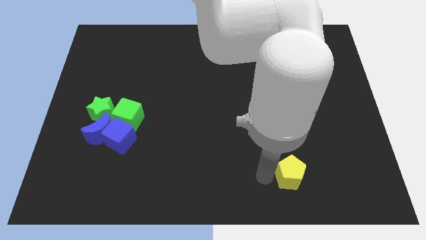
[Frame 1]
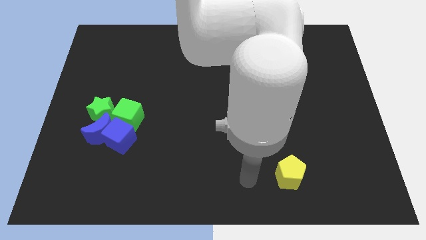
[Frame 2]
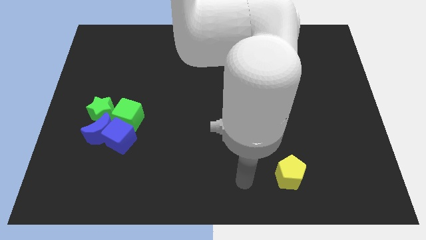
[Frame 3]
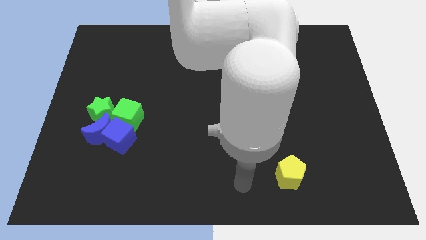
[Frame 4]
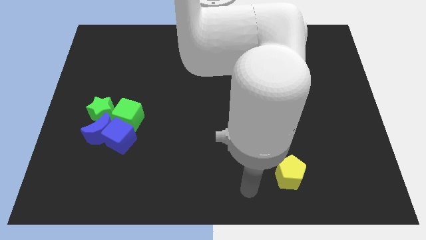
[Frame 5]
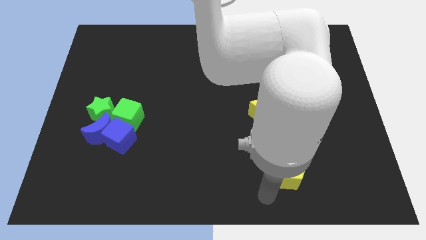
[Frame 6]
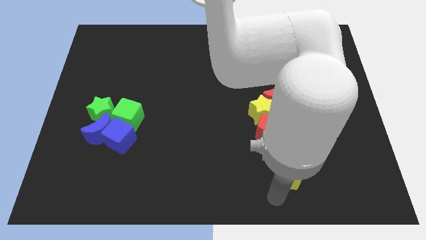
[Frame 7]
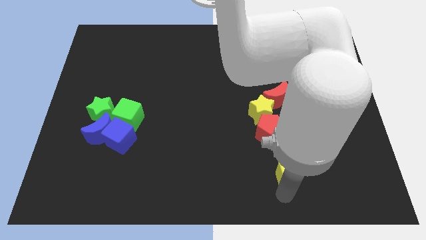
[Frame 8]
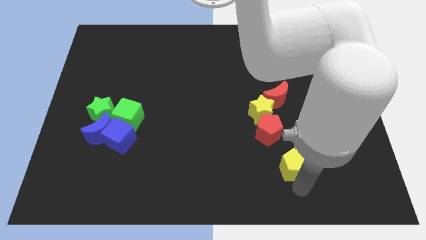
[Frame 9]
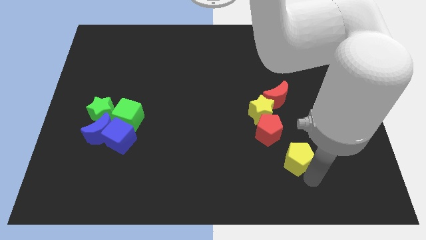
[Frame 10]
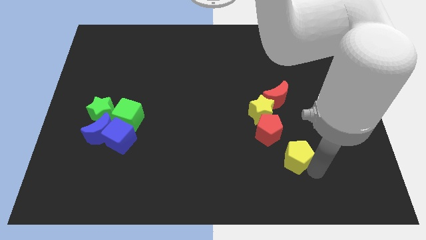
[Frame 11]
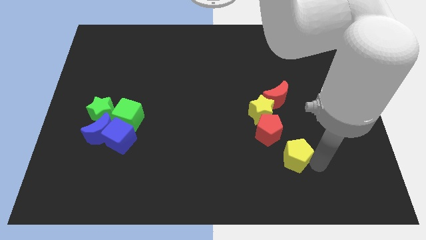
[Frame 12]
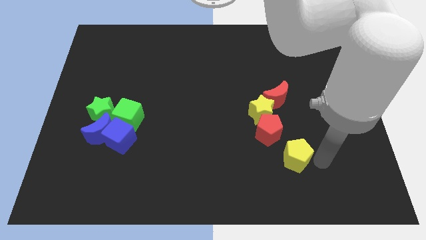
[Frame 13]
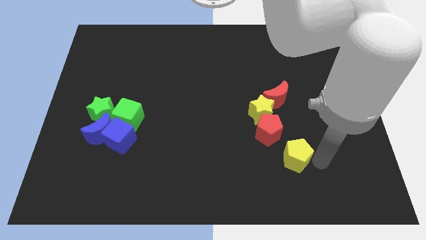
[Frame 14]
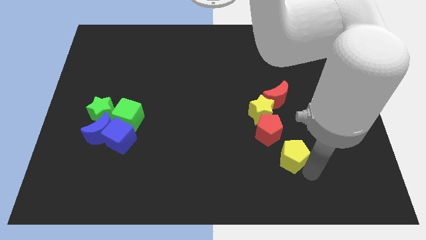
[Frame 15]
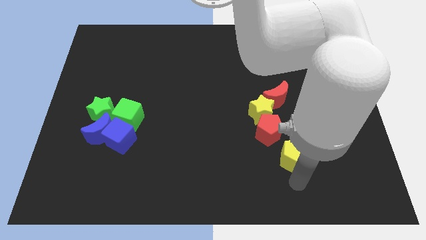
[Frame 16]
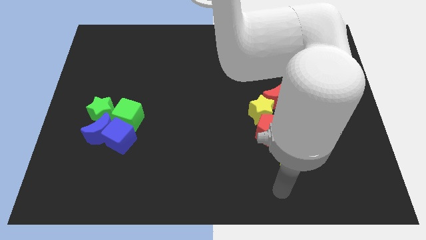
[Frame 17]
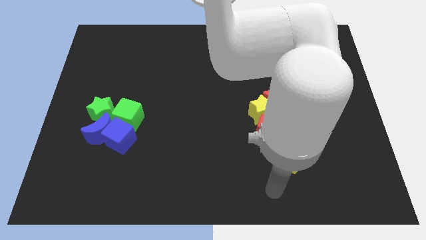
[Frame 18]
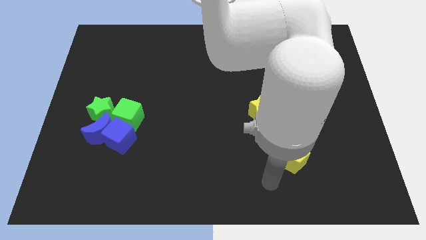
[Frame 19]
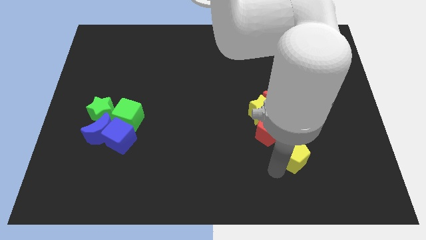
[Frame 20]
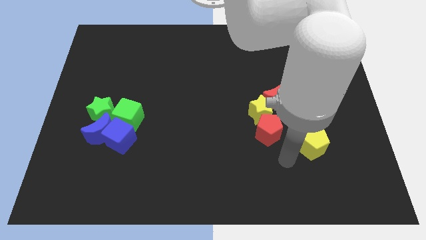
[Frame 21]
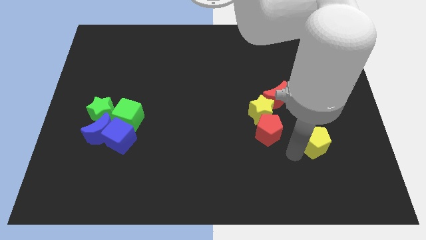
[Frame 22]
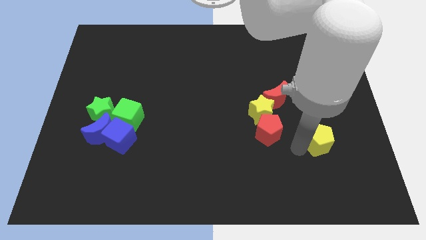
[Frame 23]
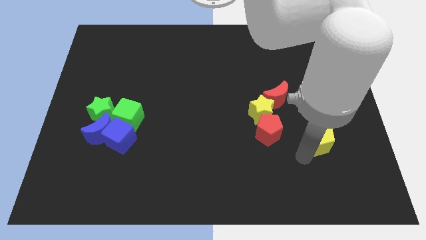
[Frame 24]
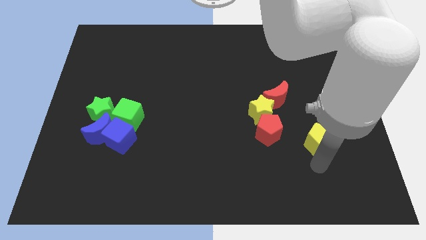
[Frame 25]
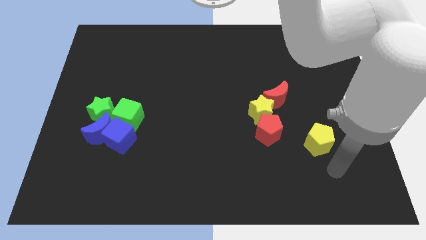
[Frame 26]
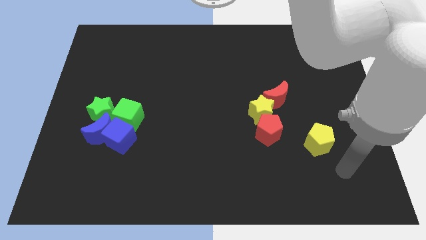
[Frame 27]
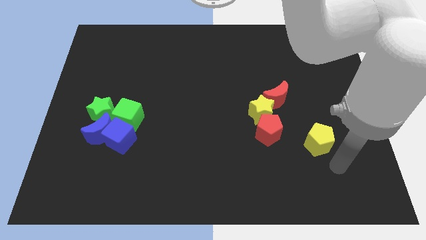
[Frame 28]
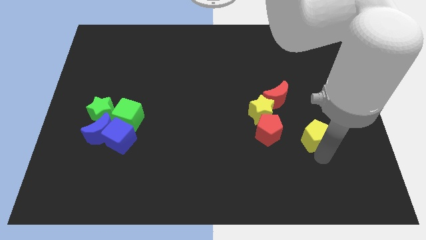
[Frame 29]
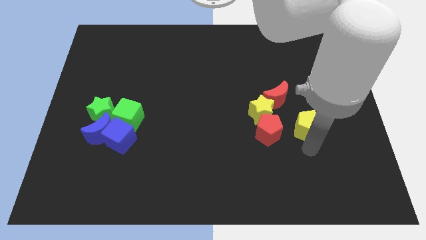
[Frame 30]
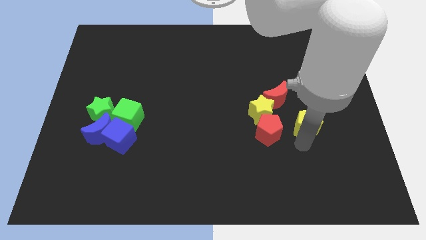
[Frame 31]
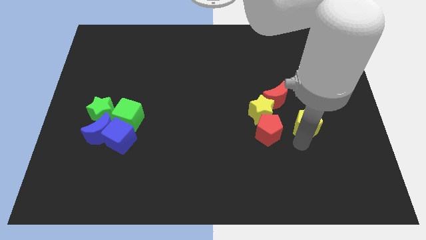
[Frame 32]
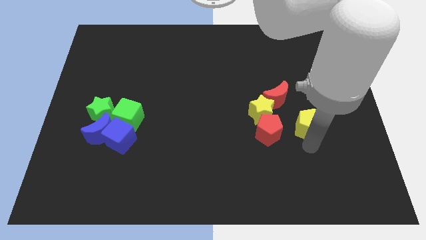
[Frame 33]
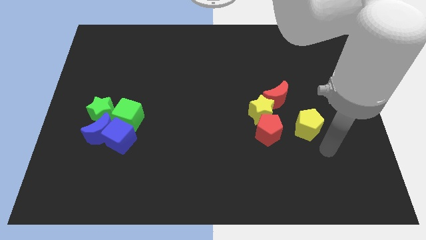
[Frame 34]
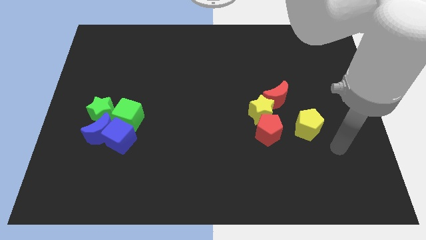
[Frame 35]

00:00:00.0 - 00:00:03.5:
push the yellow pentagon to the right of the red pentagon

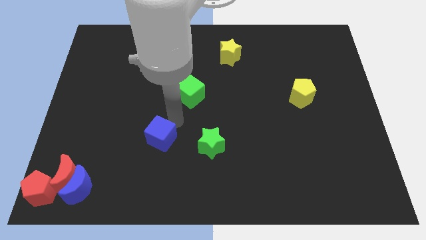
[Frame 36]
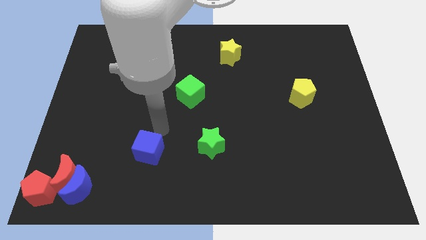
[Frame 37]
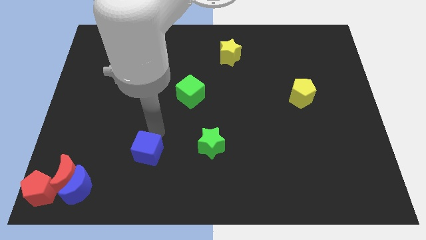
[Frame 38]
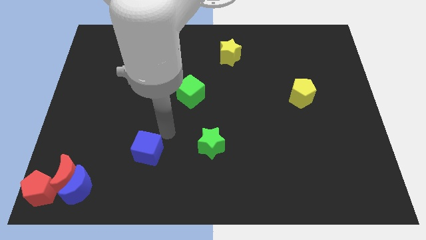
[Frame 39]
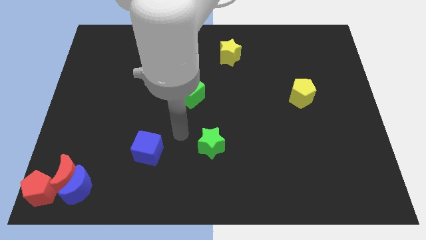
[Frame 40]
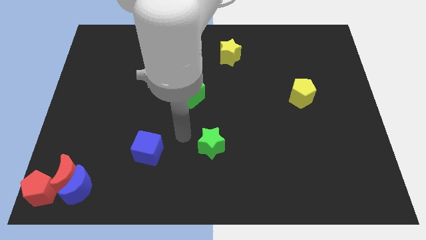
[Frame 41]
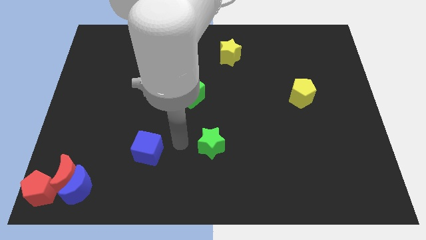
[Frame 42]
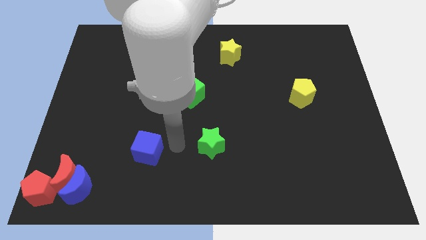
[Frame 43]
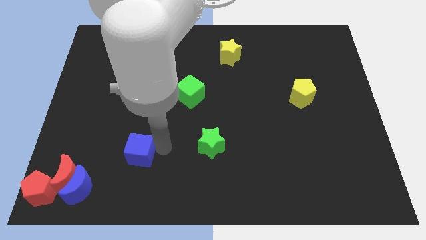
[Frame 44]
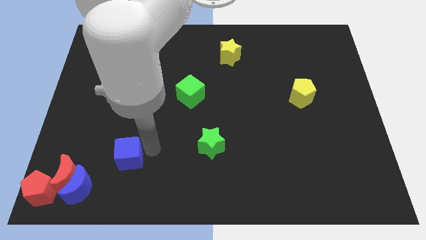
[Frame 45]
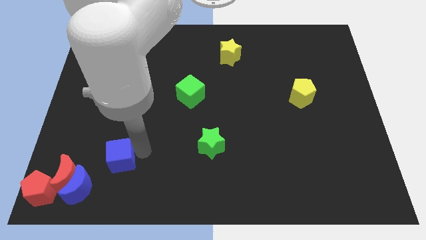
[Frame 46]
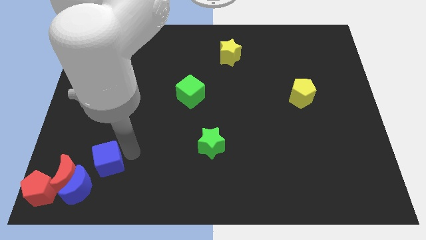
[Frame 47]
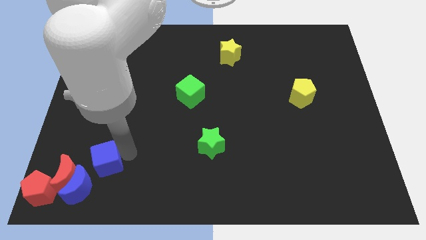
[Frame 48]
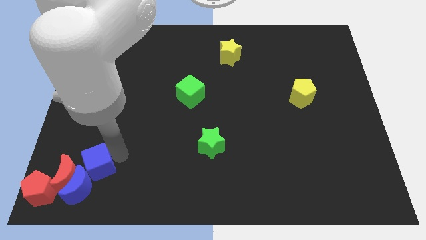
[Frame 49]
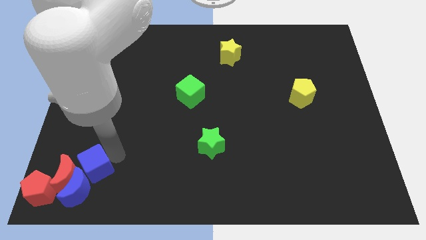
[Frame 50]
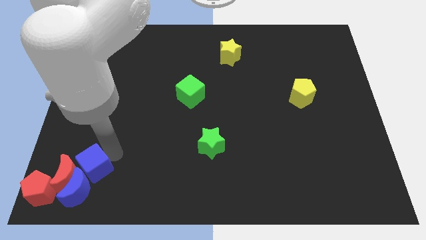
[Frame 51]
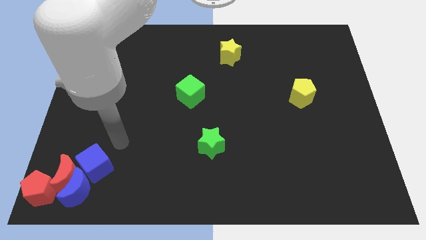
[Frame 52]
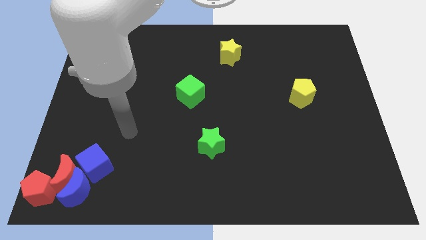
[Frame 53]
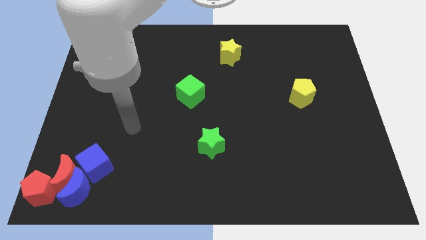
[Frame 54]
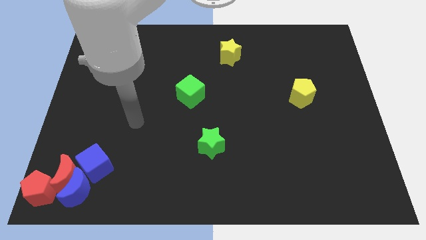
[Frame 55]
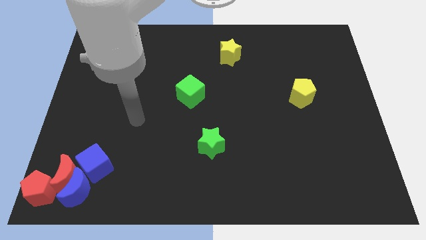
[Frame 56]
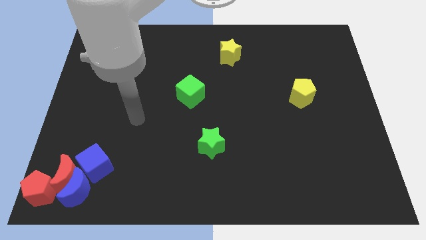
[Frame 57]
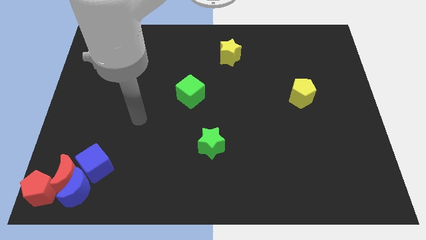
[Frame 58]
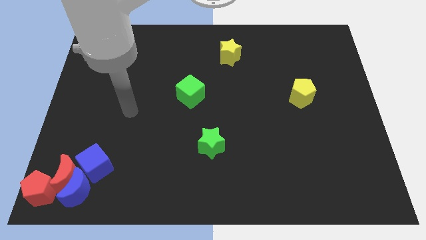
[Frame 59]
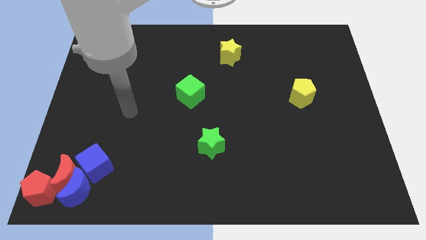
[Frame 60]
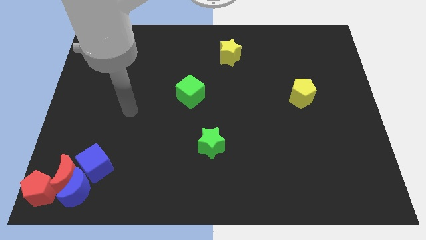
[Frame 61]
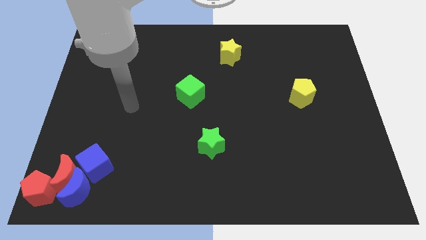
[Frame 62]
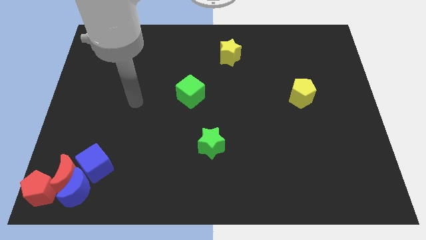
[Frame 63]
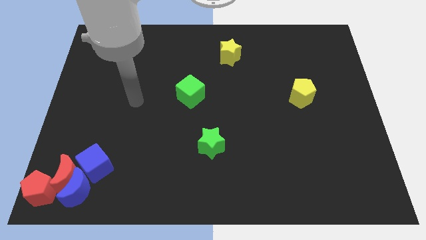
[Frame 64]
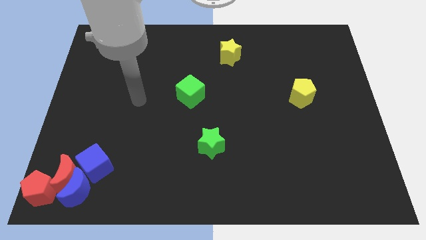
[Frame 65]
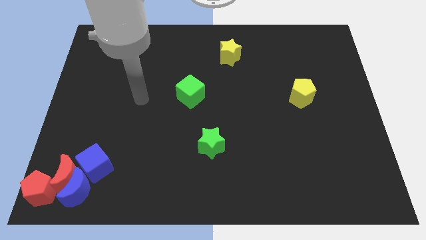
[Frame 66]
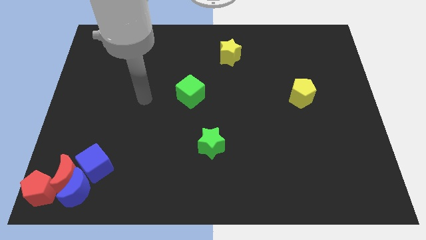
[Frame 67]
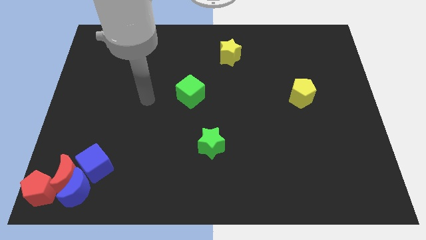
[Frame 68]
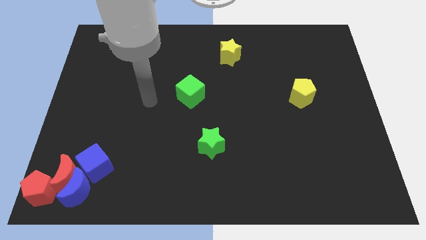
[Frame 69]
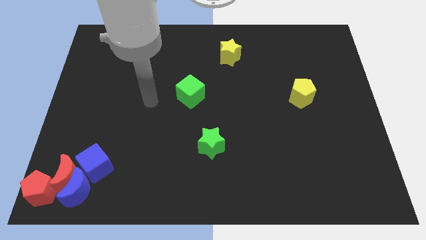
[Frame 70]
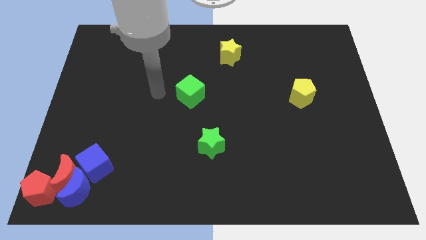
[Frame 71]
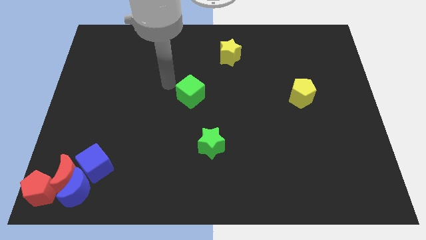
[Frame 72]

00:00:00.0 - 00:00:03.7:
push the blue cube into the blue crescent

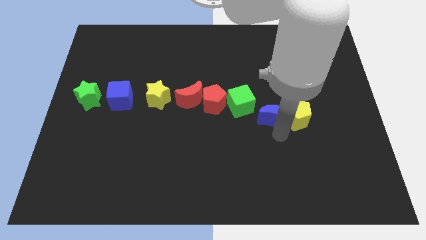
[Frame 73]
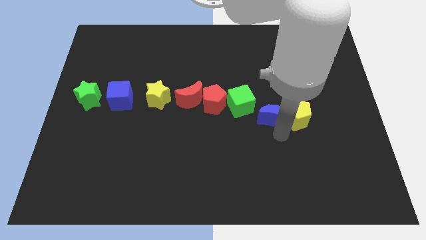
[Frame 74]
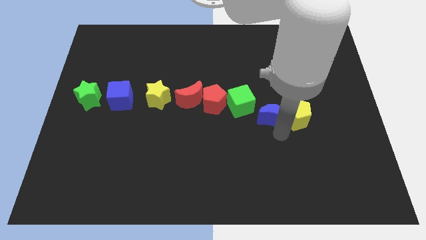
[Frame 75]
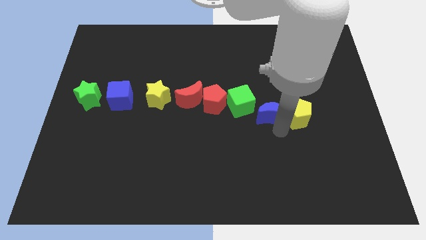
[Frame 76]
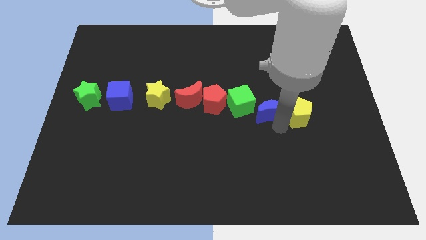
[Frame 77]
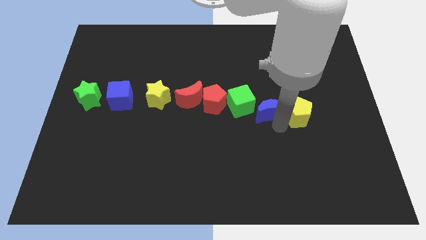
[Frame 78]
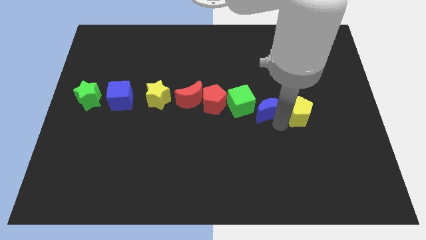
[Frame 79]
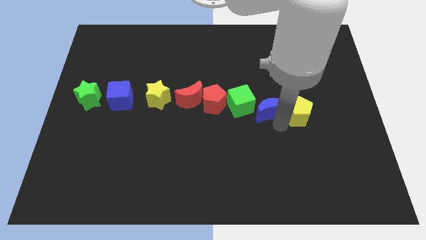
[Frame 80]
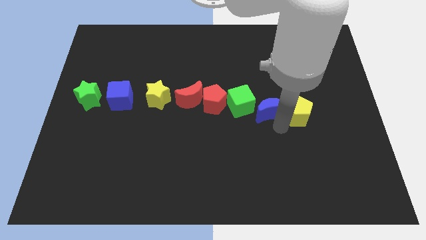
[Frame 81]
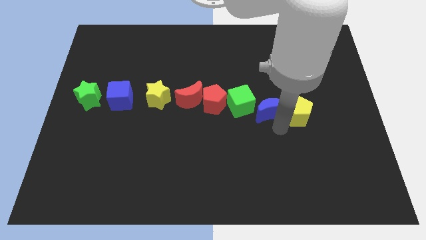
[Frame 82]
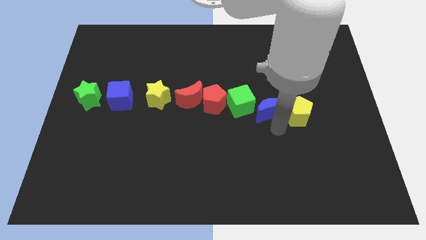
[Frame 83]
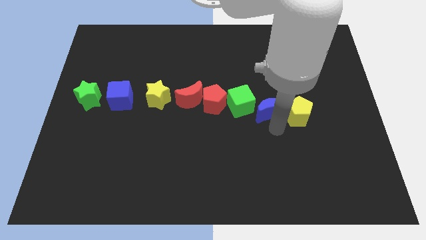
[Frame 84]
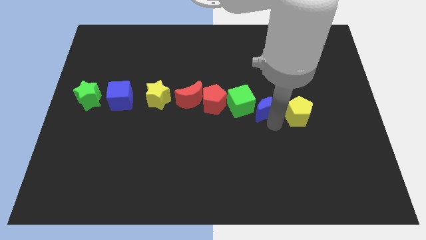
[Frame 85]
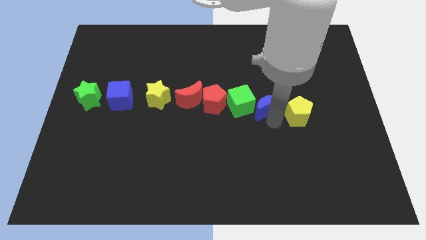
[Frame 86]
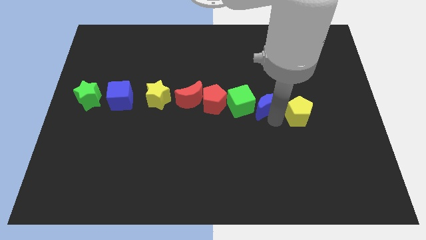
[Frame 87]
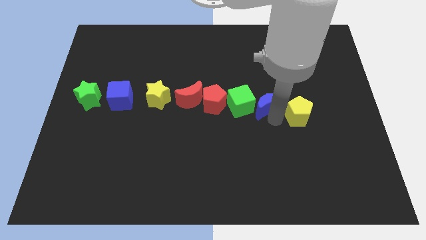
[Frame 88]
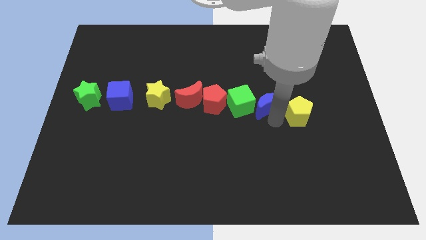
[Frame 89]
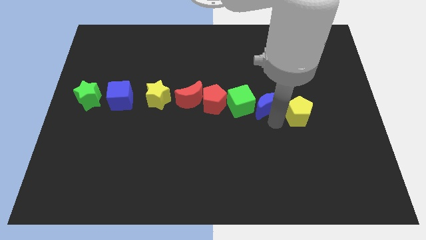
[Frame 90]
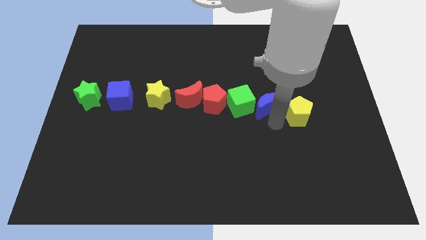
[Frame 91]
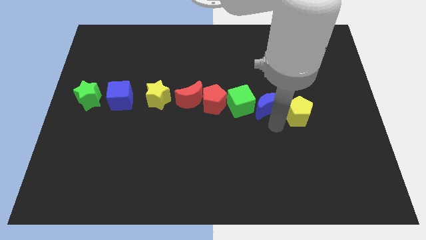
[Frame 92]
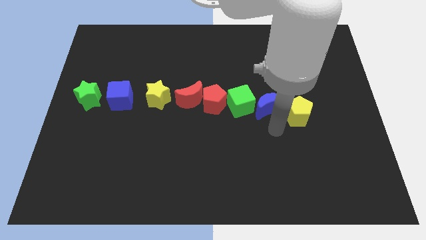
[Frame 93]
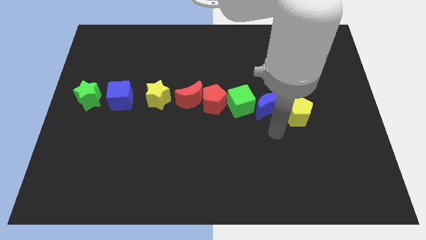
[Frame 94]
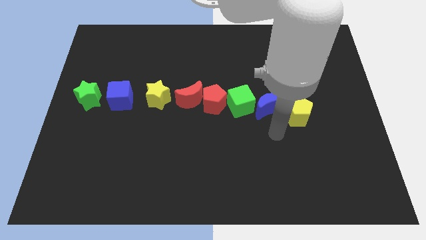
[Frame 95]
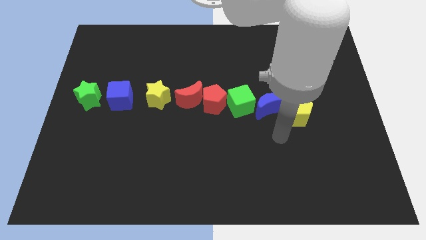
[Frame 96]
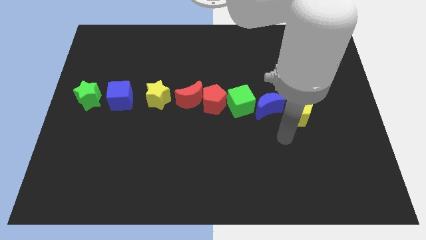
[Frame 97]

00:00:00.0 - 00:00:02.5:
move the blue crescent in between the green cube and yellow pentagon
